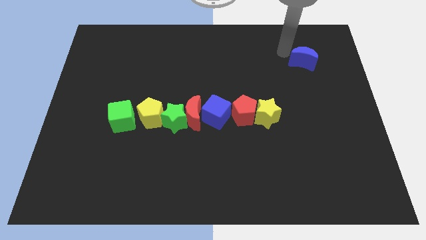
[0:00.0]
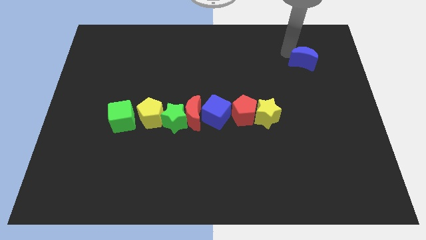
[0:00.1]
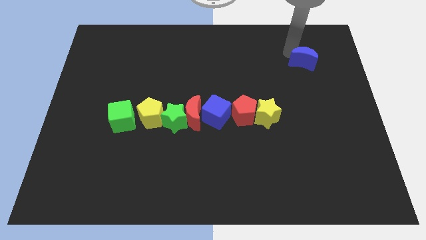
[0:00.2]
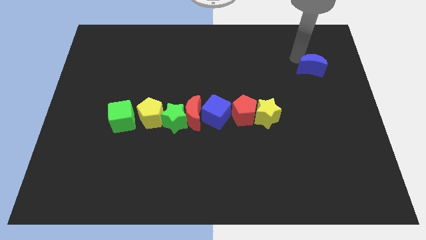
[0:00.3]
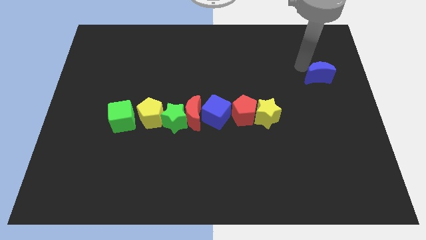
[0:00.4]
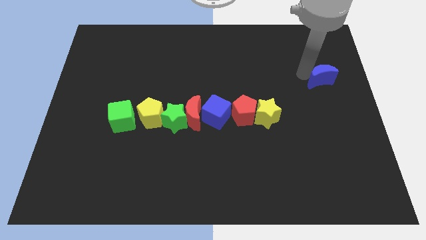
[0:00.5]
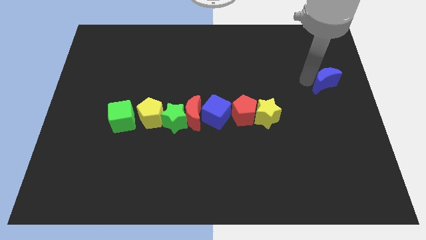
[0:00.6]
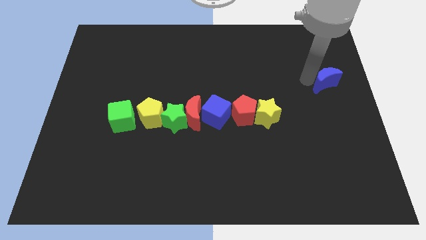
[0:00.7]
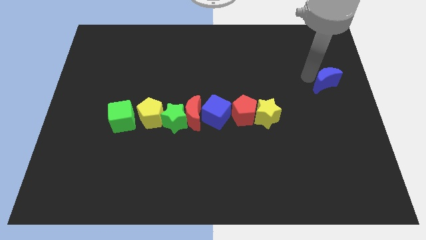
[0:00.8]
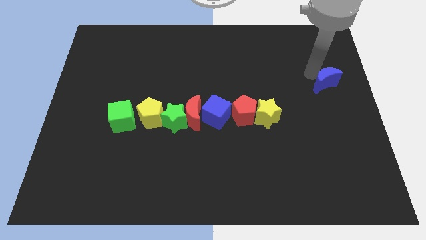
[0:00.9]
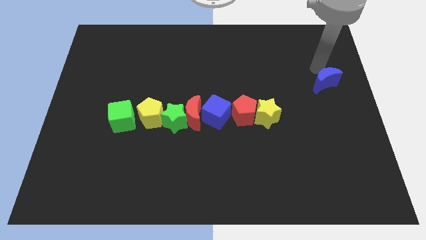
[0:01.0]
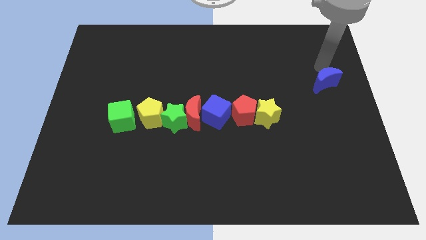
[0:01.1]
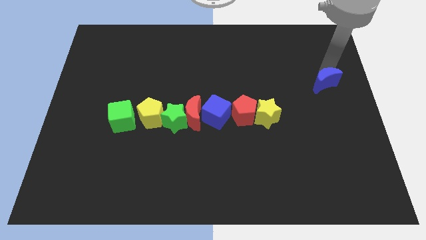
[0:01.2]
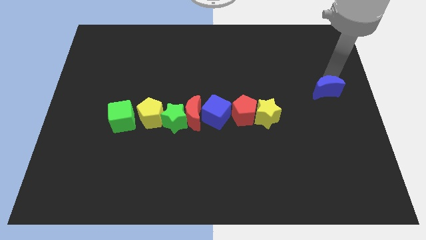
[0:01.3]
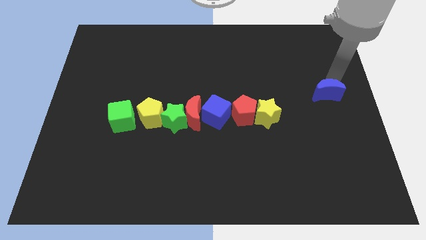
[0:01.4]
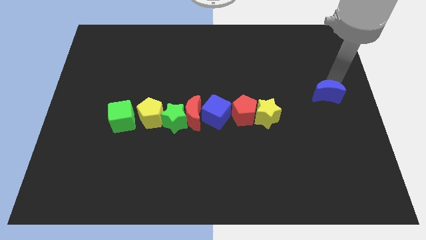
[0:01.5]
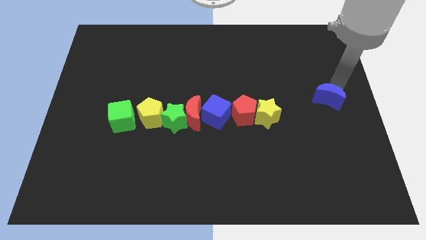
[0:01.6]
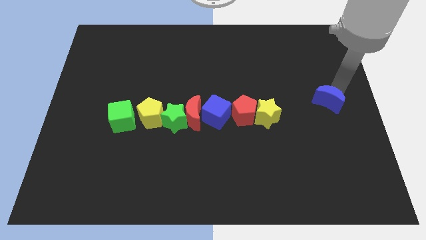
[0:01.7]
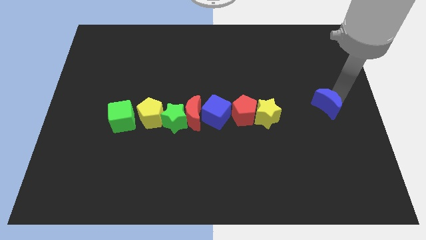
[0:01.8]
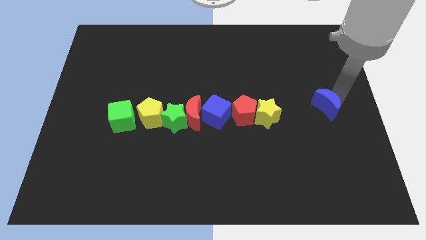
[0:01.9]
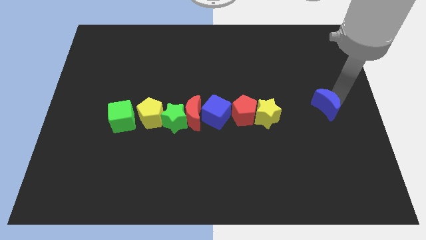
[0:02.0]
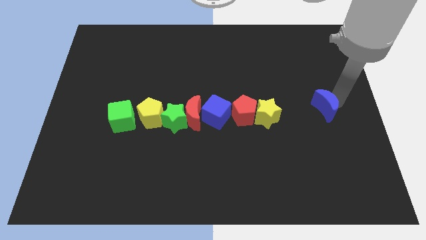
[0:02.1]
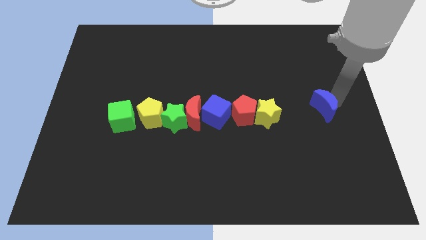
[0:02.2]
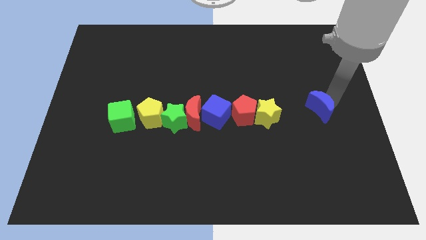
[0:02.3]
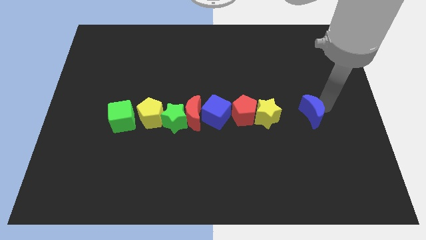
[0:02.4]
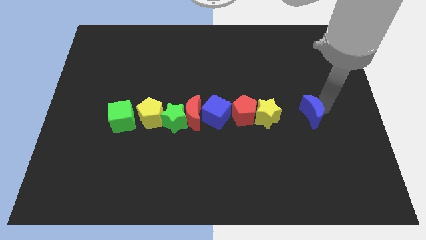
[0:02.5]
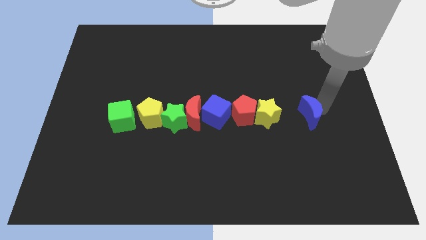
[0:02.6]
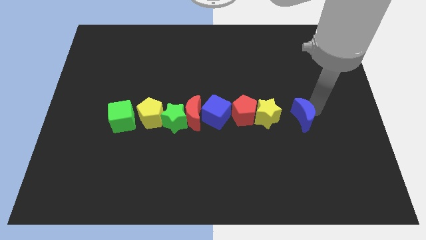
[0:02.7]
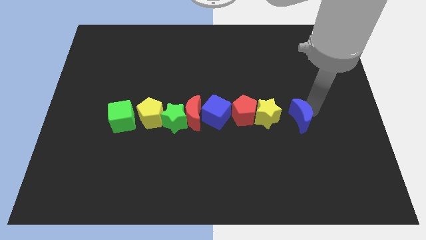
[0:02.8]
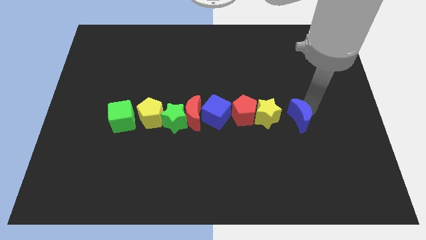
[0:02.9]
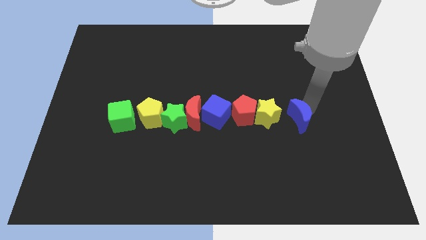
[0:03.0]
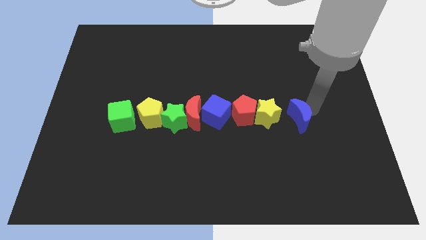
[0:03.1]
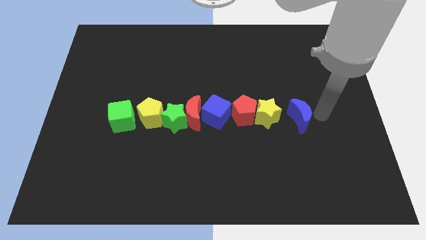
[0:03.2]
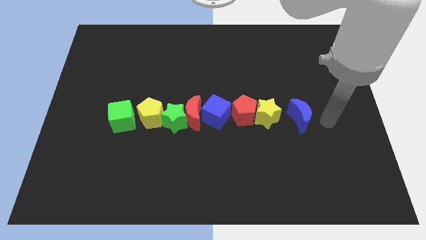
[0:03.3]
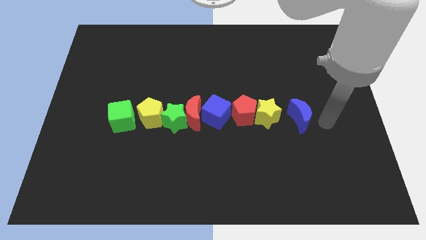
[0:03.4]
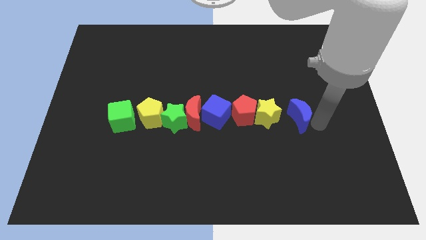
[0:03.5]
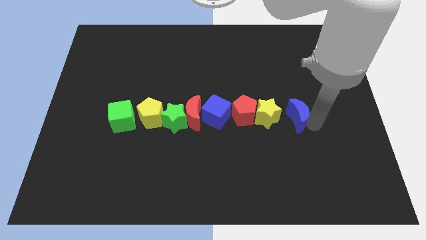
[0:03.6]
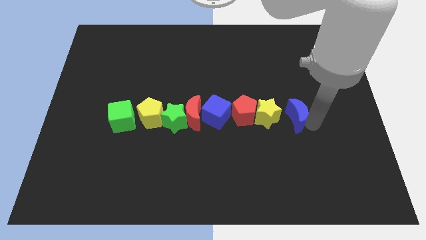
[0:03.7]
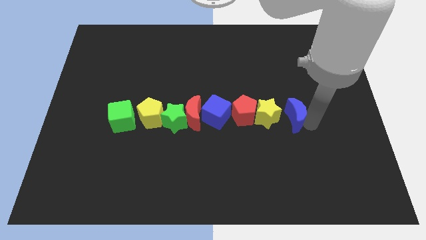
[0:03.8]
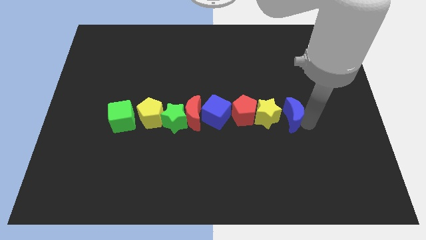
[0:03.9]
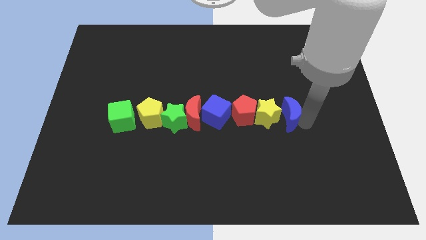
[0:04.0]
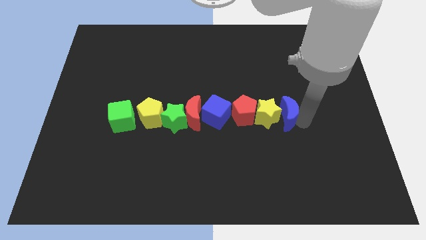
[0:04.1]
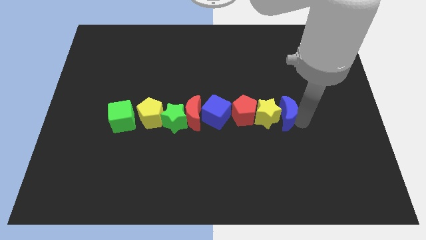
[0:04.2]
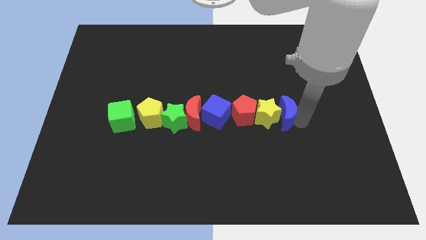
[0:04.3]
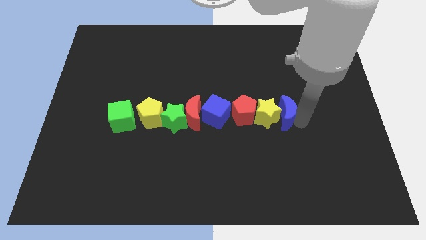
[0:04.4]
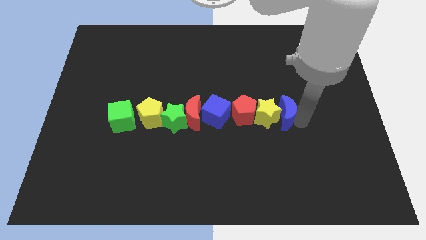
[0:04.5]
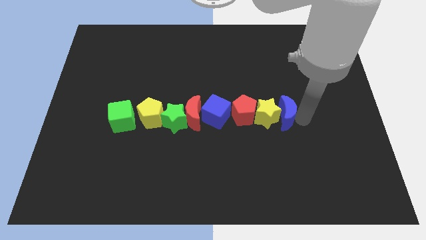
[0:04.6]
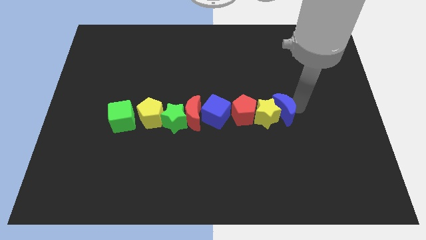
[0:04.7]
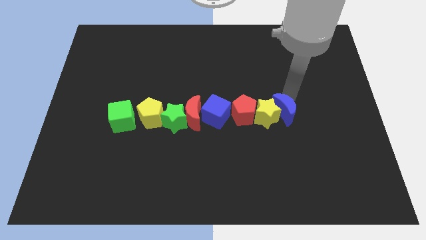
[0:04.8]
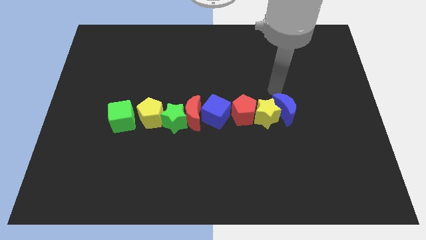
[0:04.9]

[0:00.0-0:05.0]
push the blue crescent to the right of the yellow star

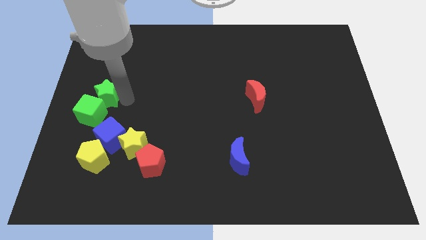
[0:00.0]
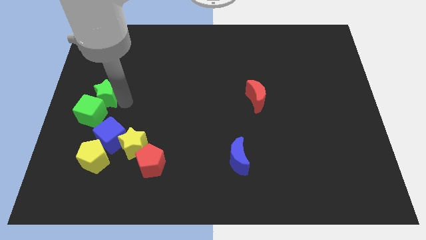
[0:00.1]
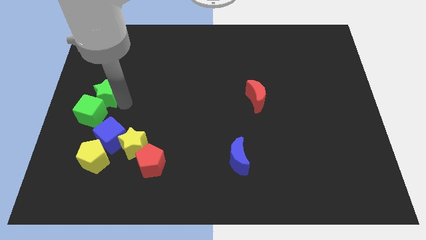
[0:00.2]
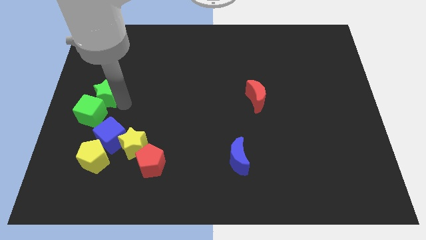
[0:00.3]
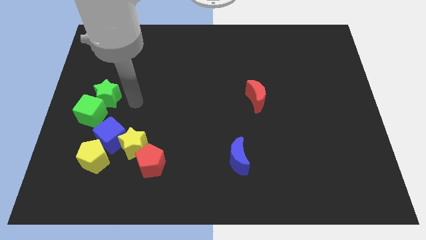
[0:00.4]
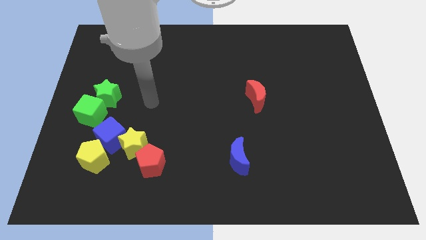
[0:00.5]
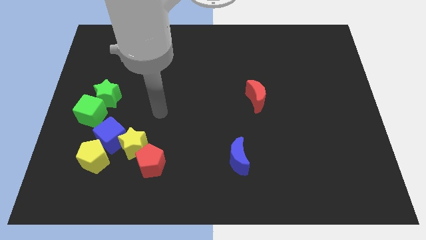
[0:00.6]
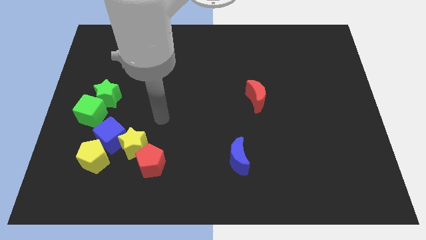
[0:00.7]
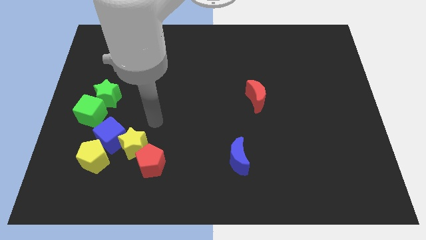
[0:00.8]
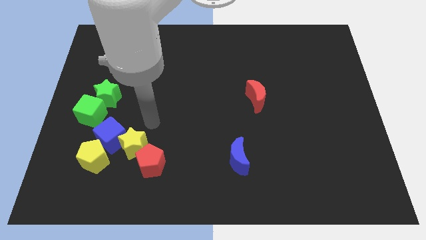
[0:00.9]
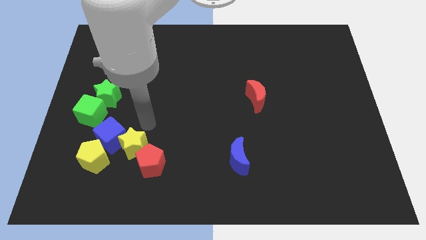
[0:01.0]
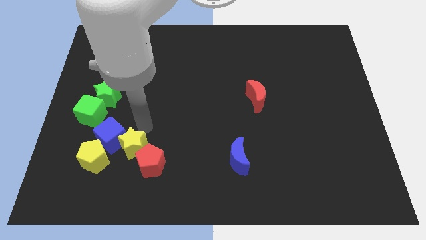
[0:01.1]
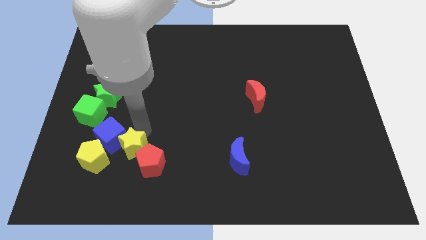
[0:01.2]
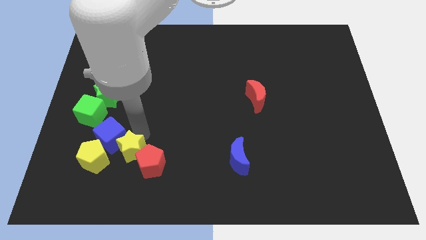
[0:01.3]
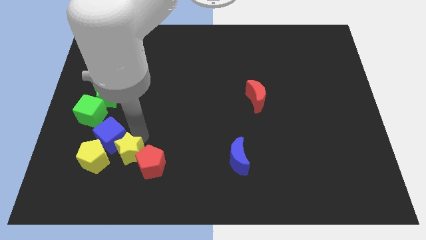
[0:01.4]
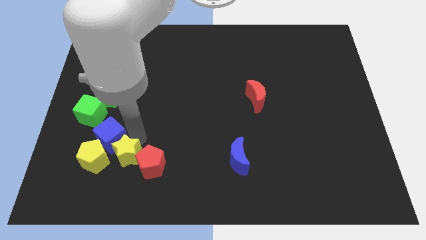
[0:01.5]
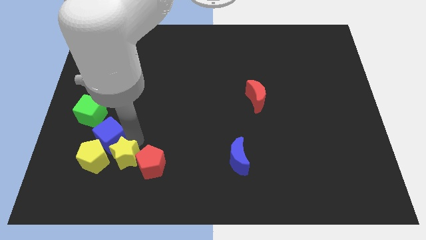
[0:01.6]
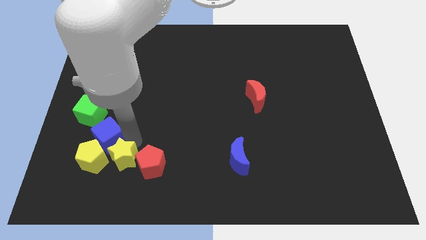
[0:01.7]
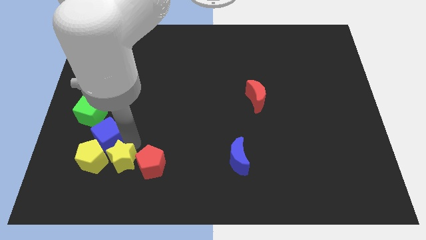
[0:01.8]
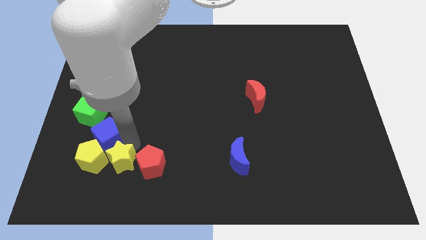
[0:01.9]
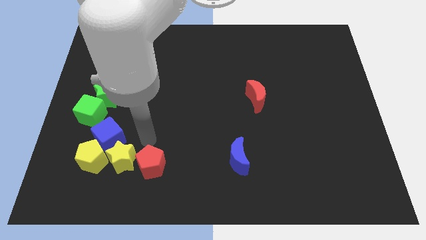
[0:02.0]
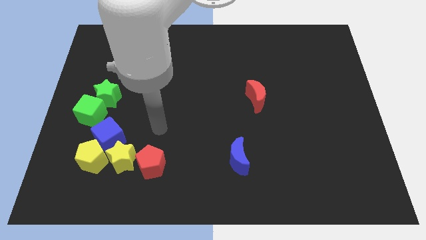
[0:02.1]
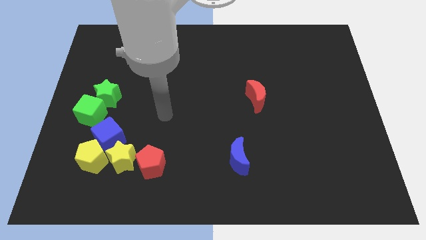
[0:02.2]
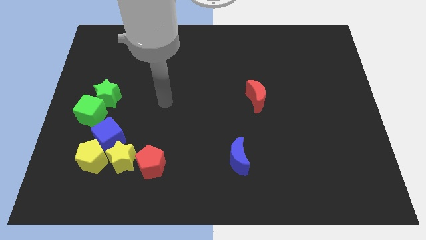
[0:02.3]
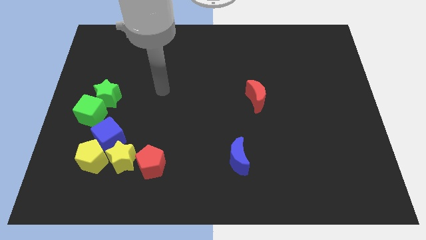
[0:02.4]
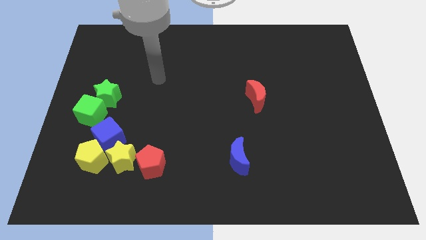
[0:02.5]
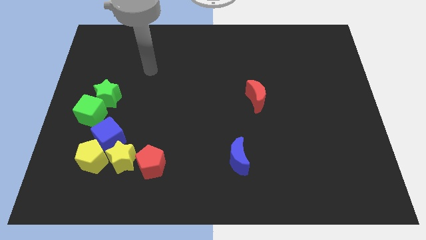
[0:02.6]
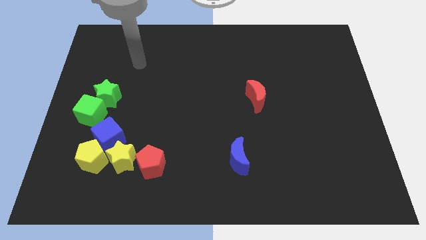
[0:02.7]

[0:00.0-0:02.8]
move the yellow star in between the red and yellow pentagons

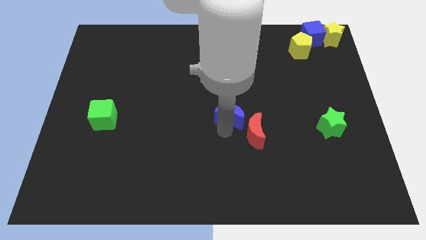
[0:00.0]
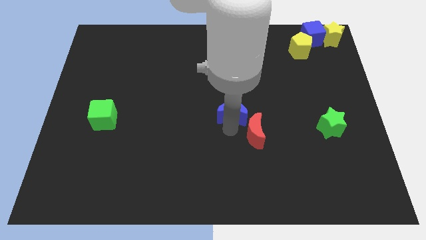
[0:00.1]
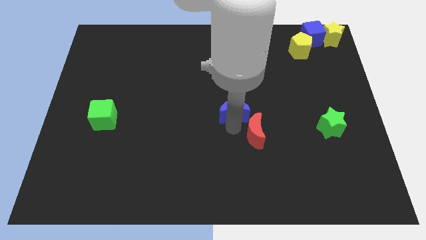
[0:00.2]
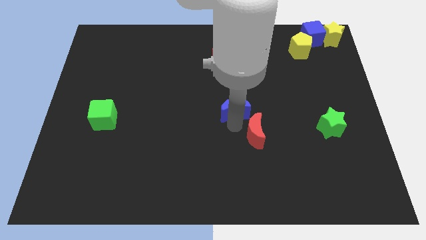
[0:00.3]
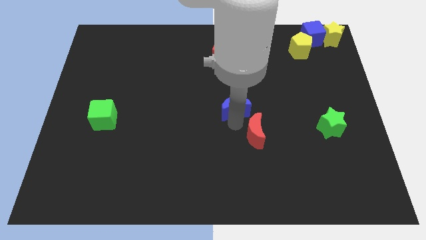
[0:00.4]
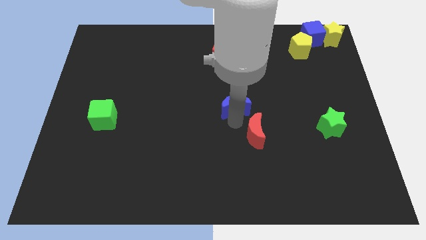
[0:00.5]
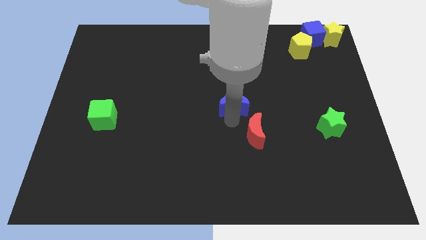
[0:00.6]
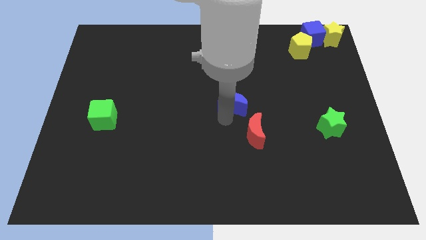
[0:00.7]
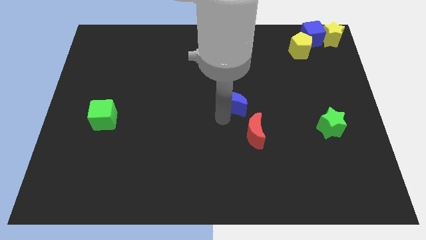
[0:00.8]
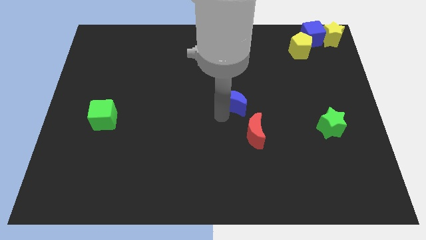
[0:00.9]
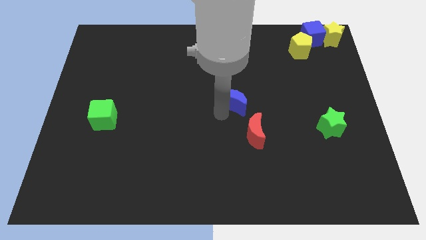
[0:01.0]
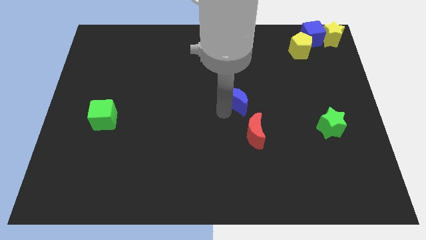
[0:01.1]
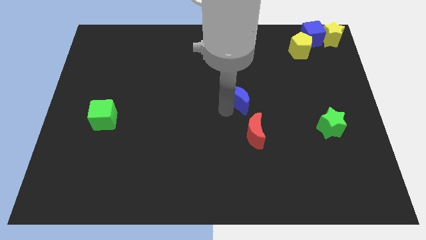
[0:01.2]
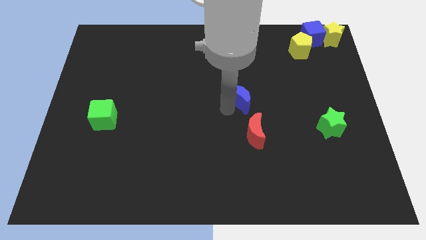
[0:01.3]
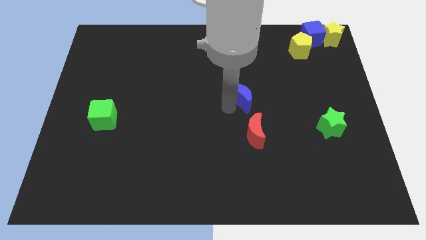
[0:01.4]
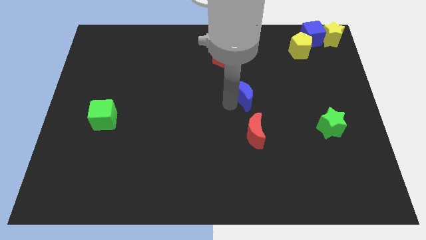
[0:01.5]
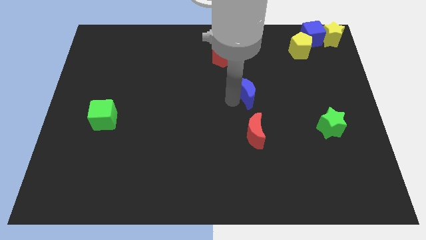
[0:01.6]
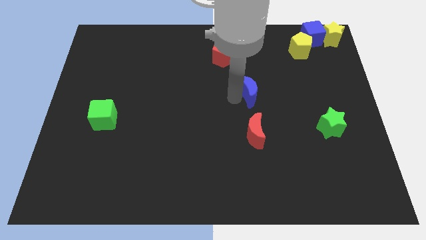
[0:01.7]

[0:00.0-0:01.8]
place the blue crescent on top of the red crescent
